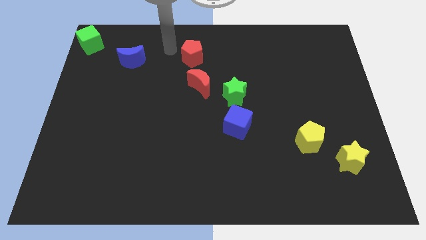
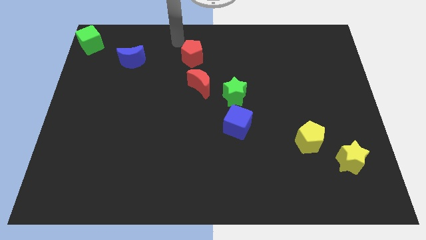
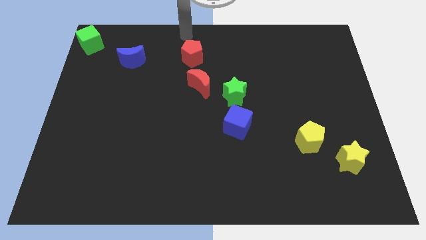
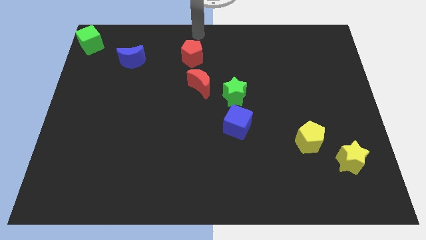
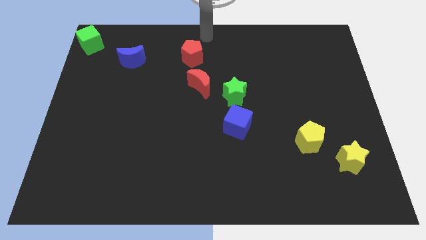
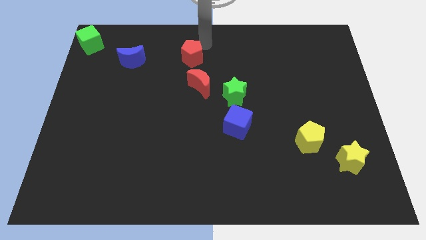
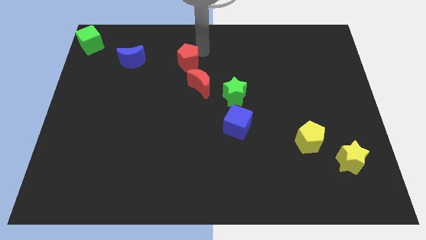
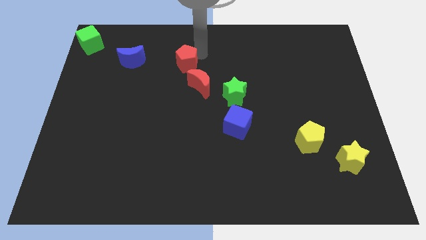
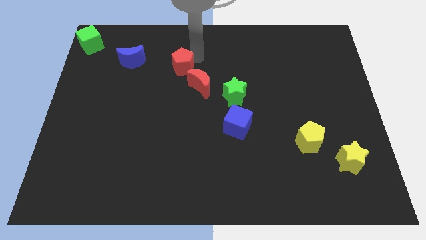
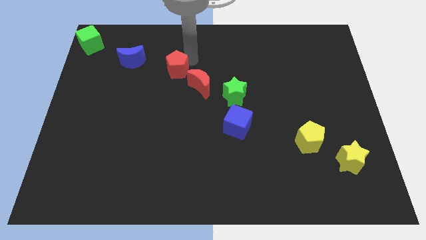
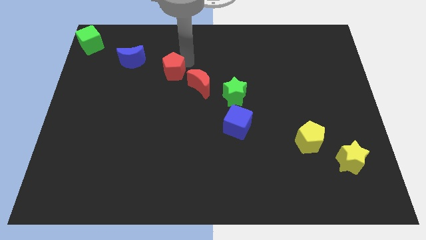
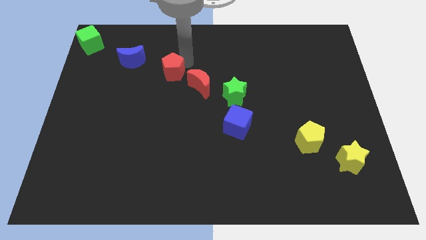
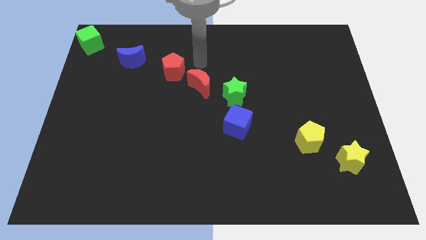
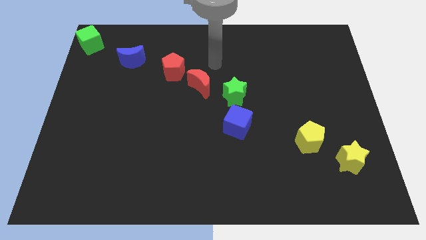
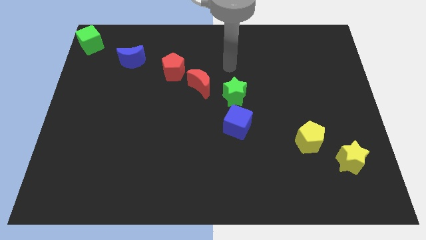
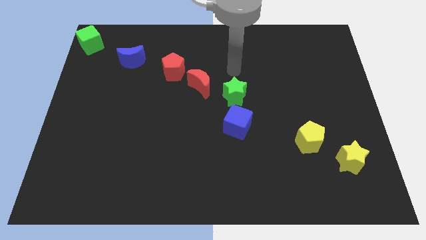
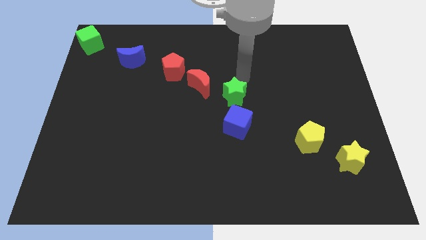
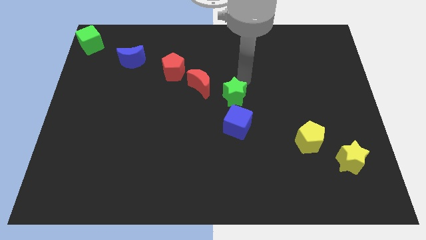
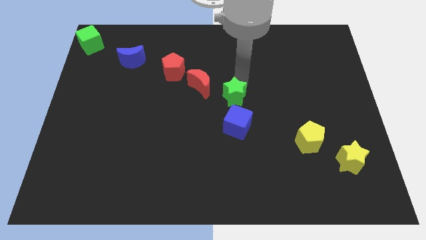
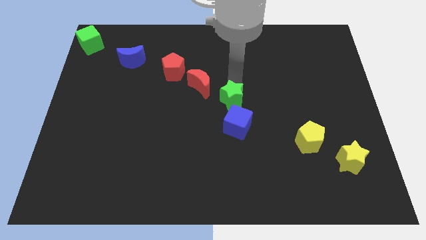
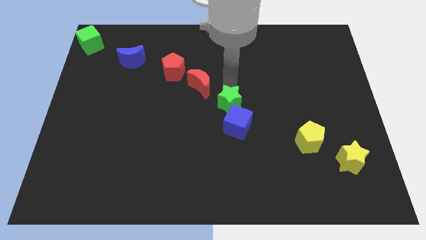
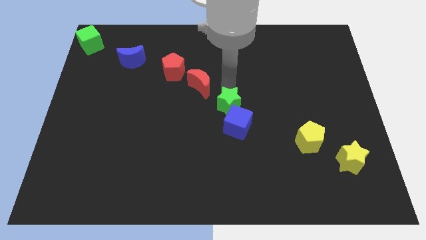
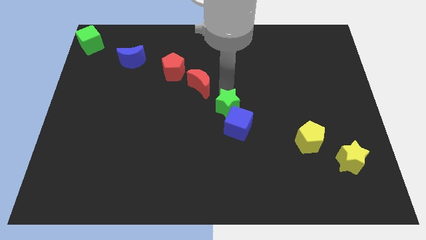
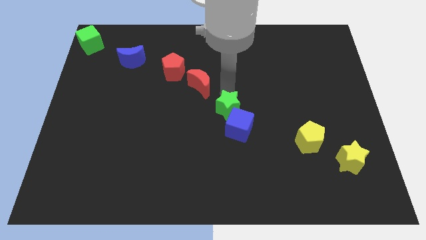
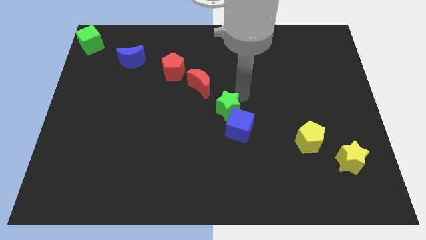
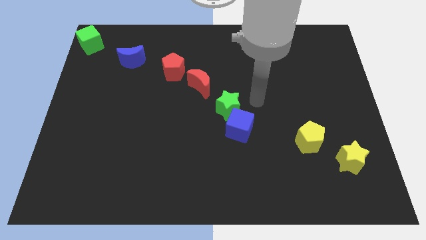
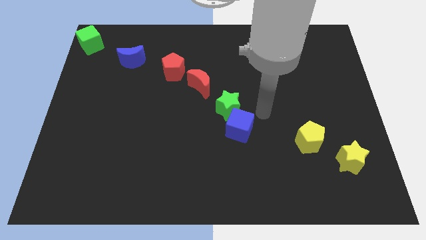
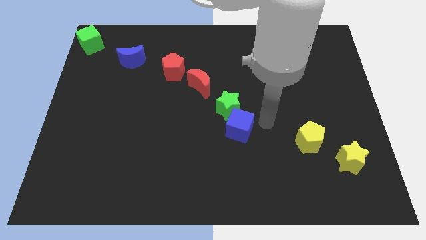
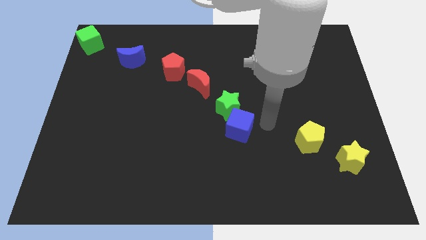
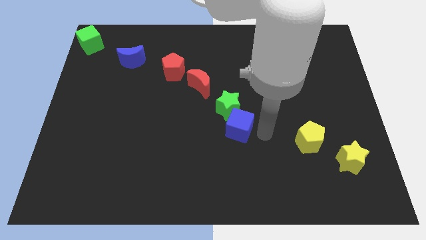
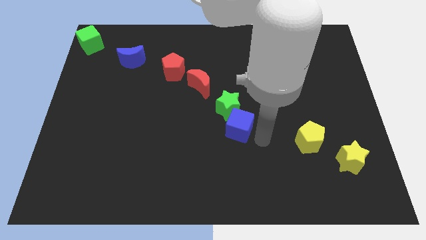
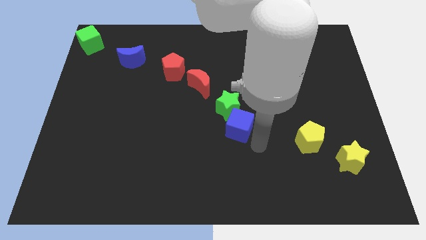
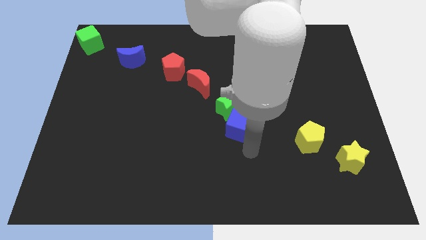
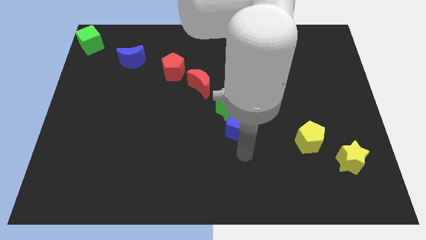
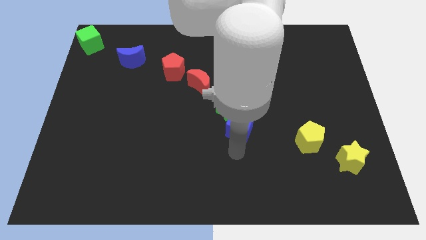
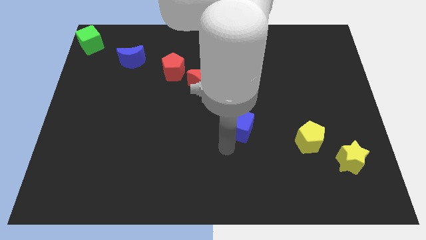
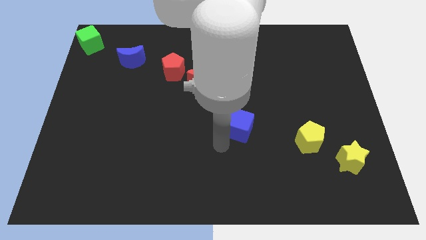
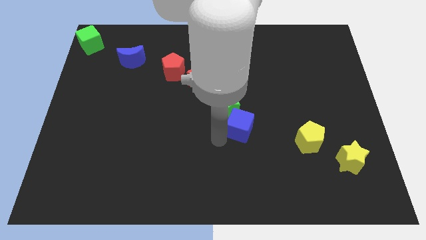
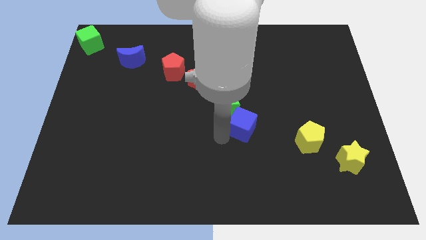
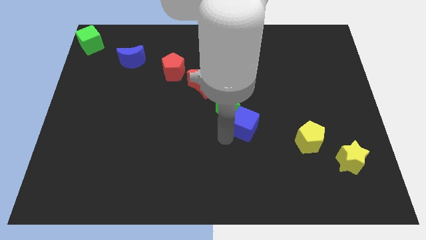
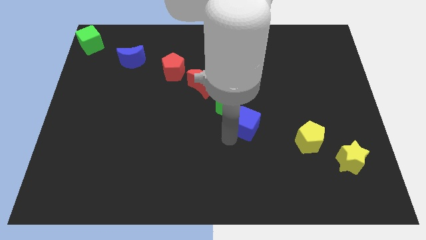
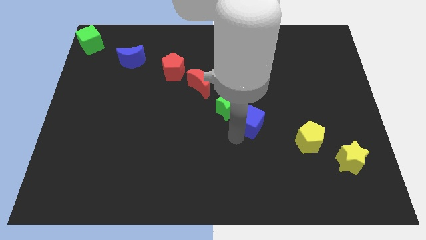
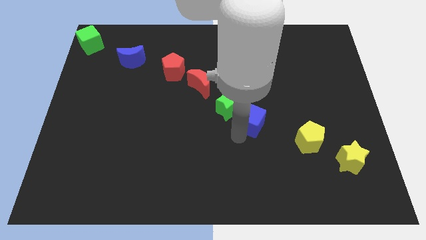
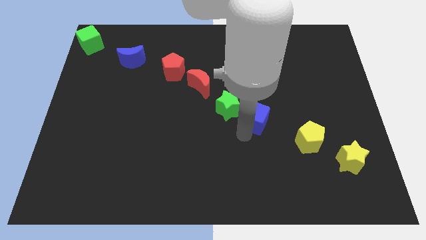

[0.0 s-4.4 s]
place the red pentagon diagonal to the red moon

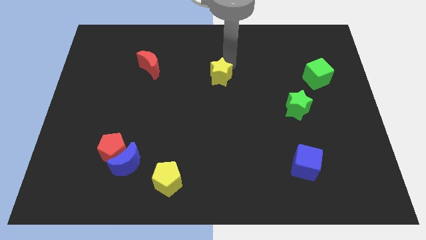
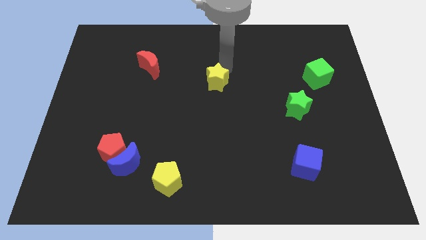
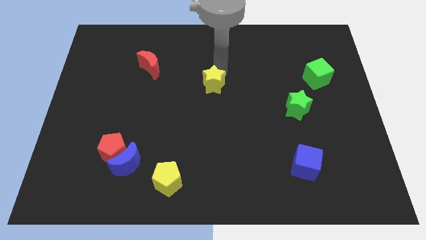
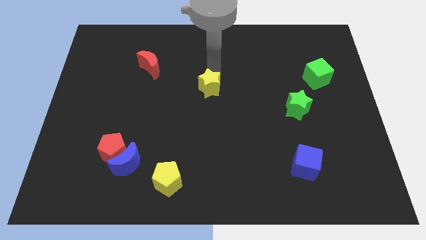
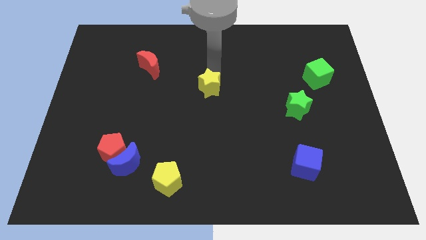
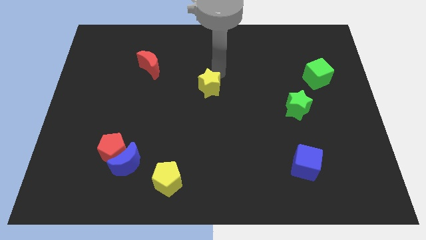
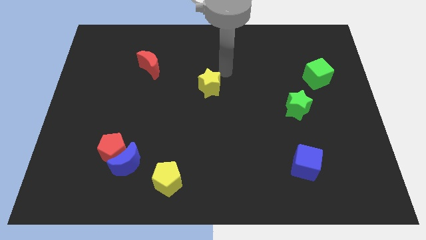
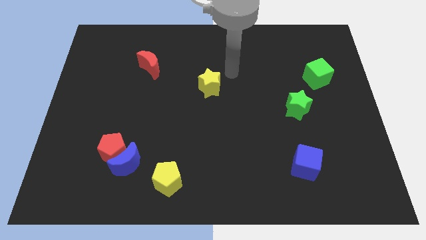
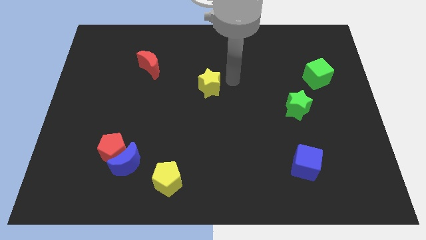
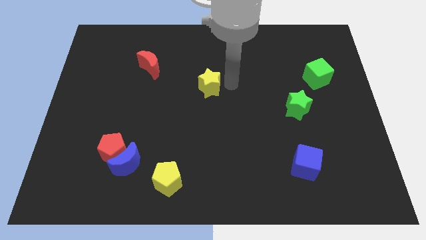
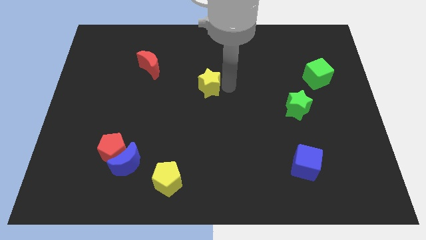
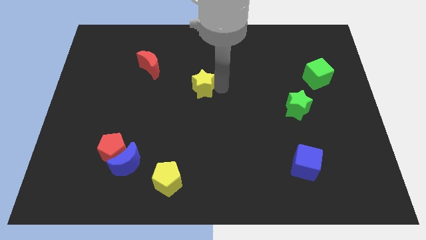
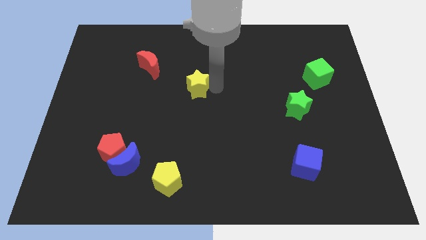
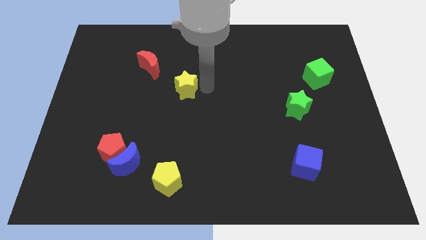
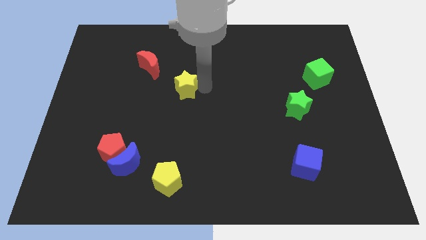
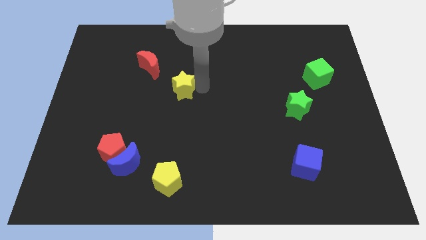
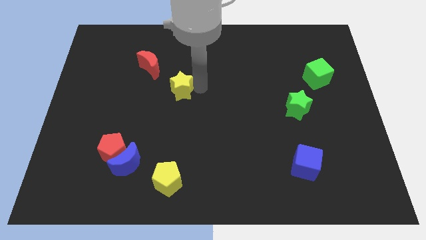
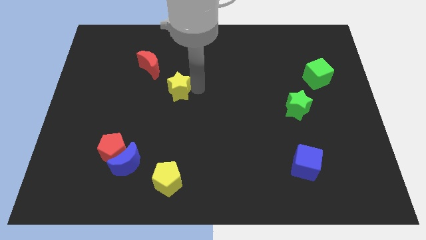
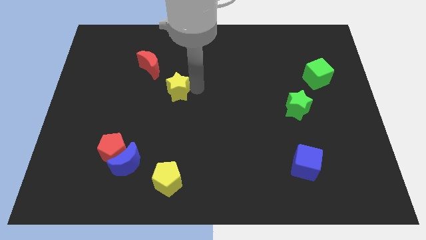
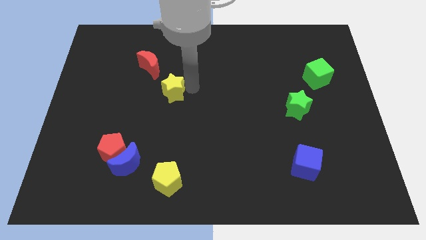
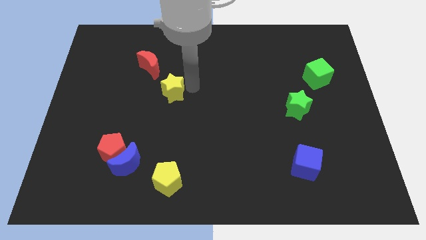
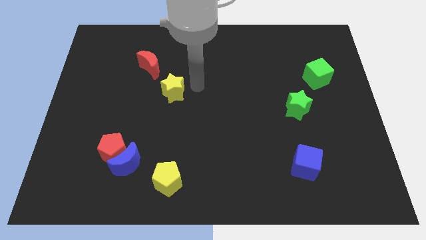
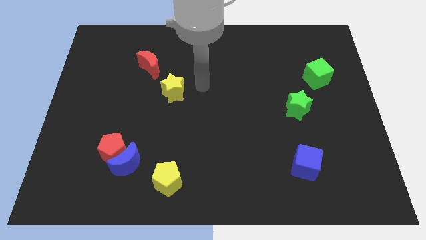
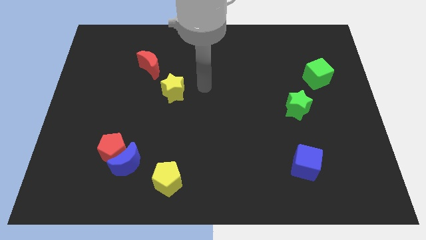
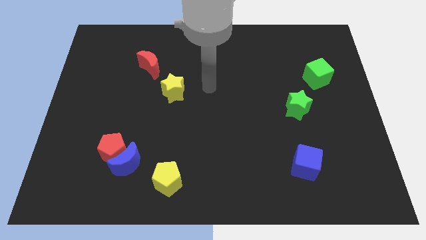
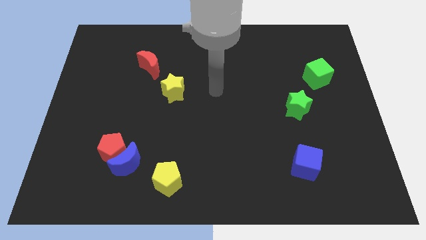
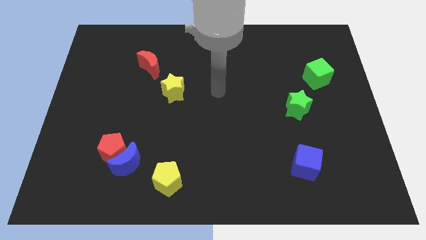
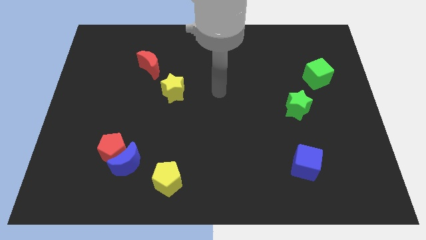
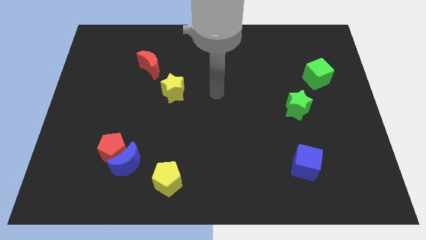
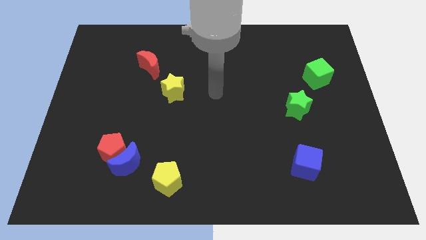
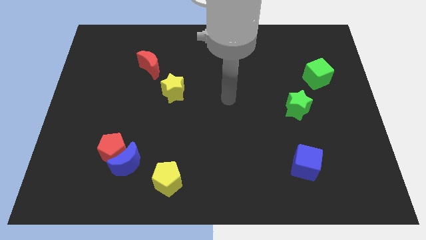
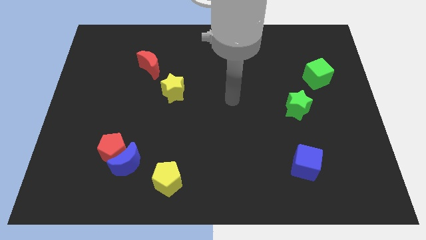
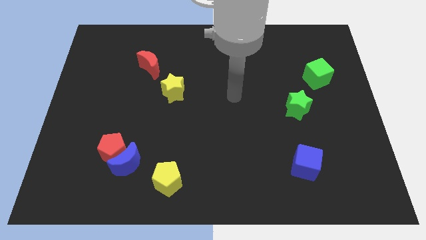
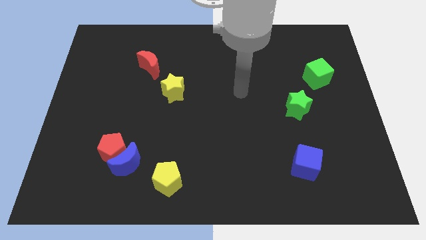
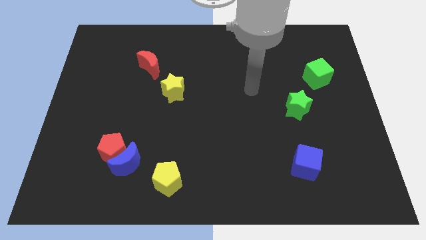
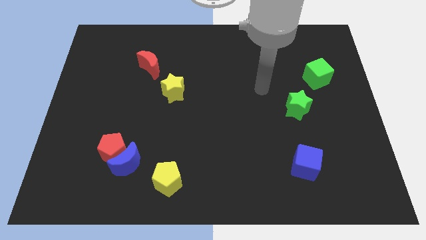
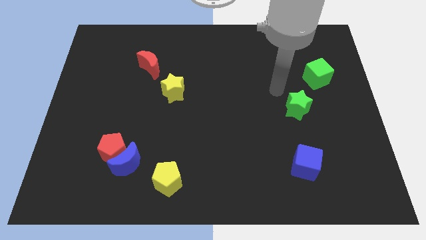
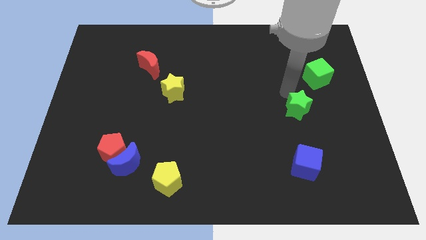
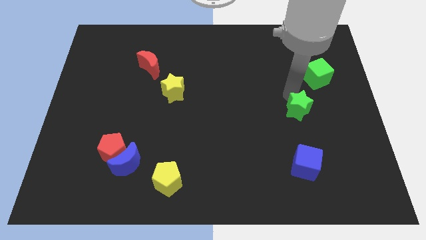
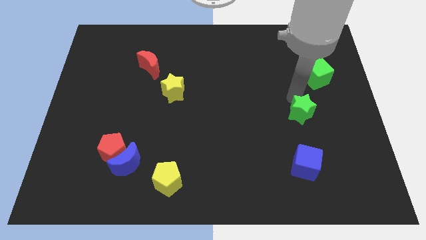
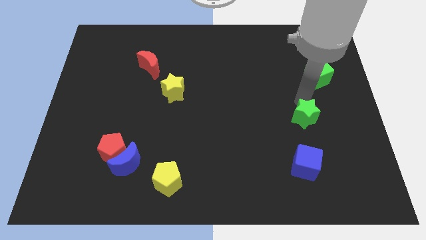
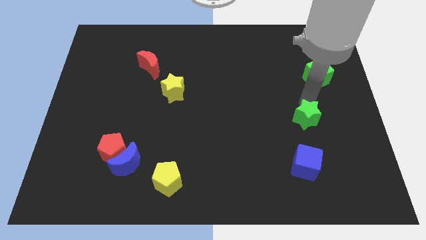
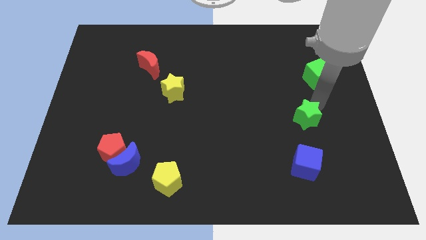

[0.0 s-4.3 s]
push green star slightly downward

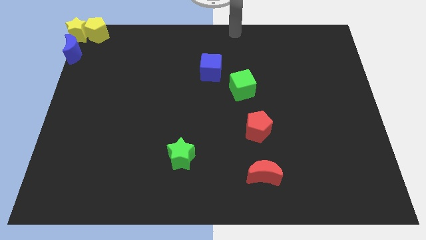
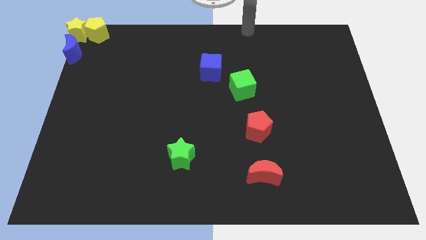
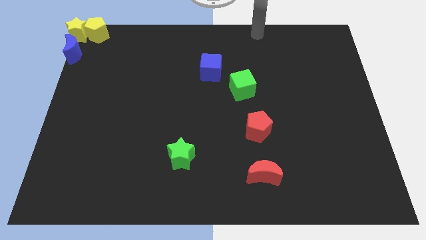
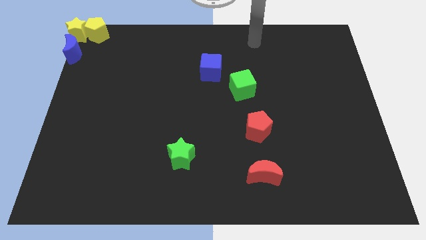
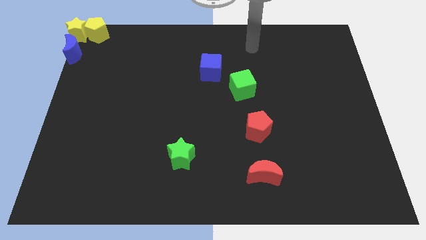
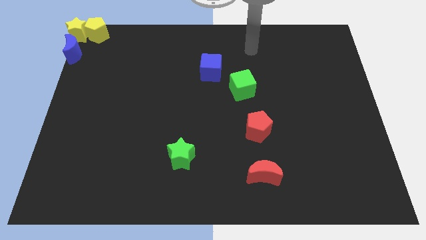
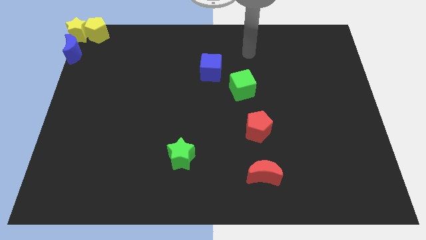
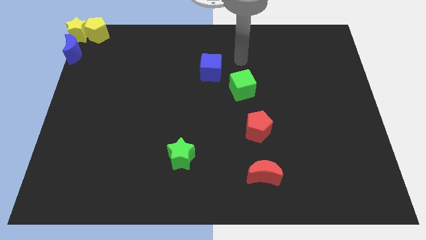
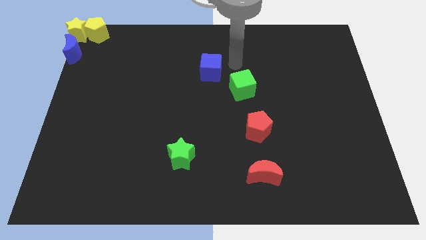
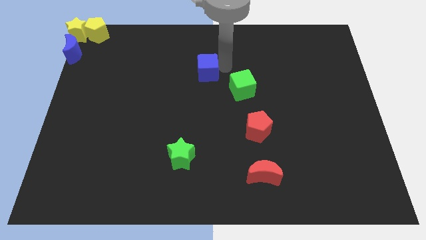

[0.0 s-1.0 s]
move close to blue cube
